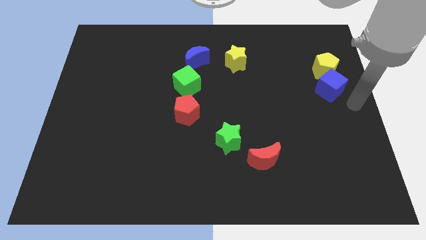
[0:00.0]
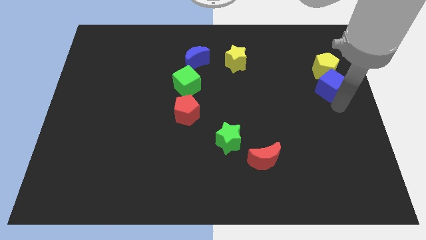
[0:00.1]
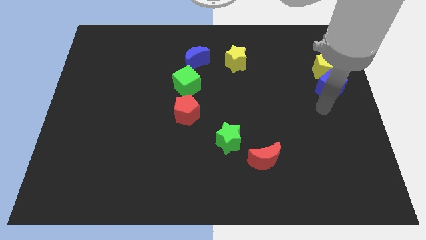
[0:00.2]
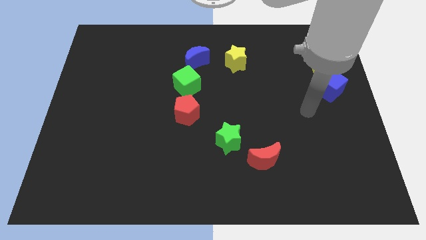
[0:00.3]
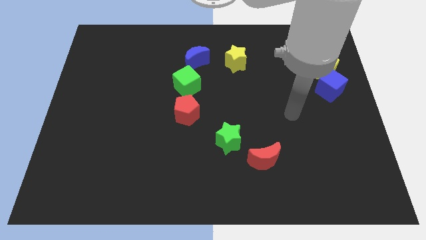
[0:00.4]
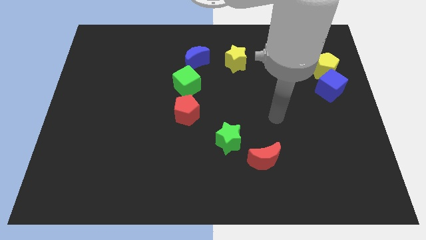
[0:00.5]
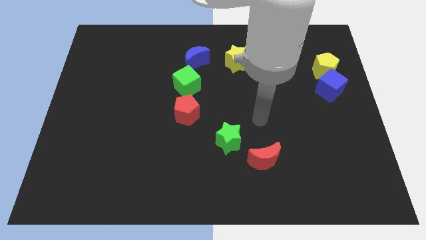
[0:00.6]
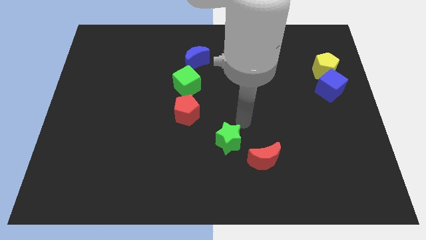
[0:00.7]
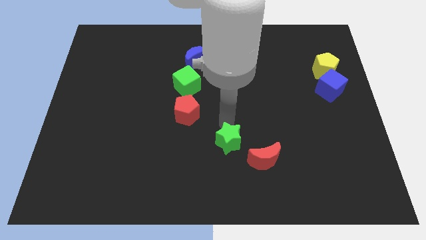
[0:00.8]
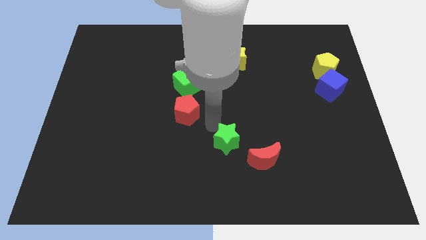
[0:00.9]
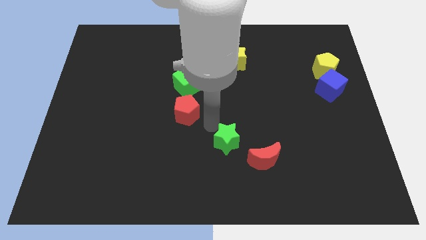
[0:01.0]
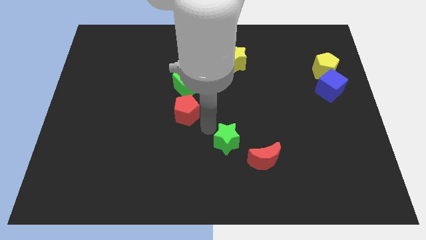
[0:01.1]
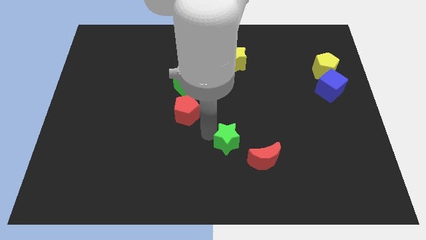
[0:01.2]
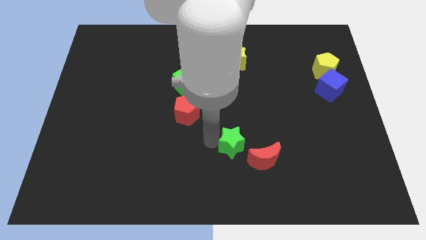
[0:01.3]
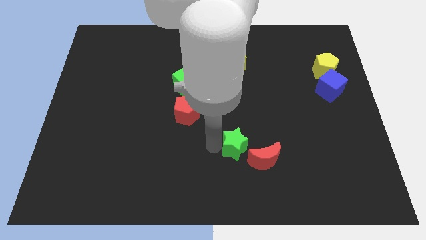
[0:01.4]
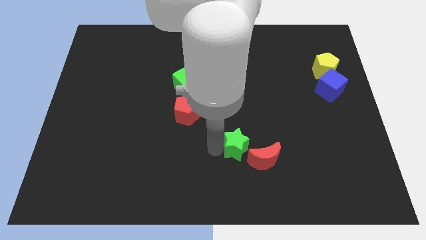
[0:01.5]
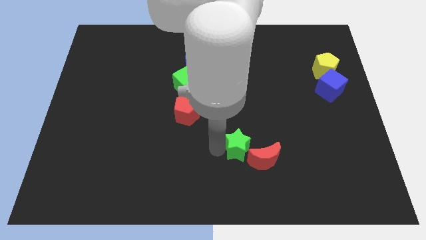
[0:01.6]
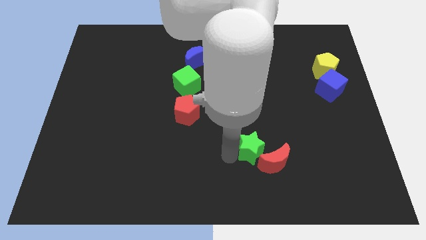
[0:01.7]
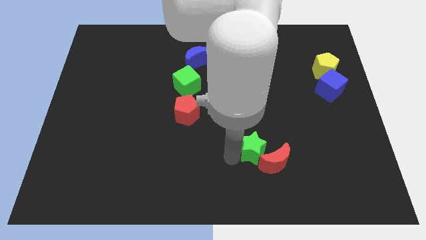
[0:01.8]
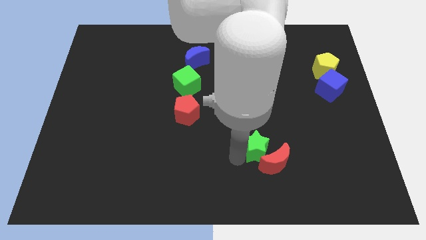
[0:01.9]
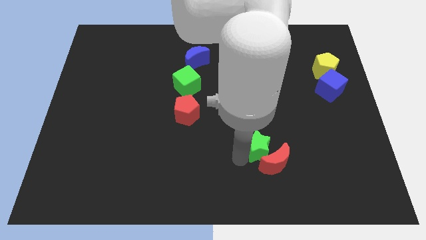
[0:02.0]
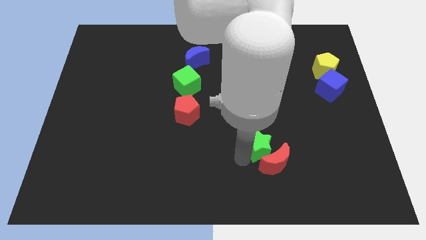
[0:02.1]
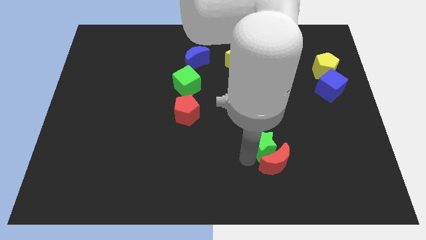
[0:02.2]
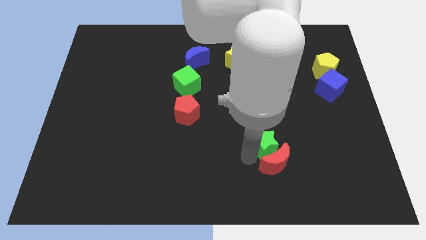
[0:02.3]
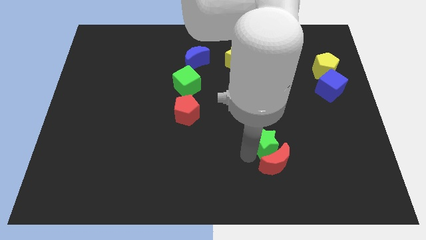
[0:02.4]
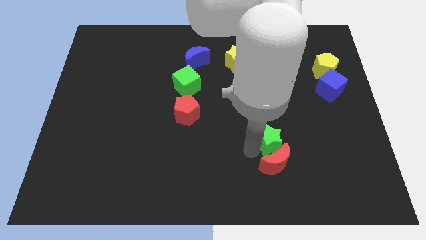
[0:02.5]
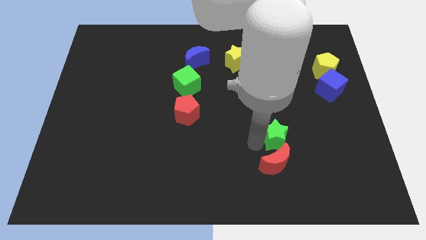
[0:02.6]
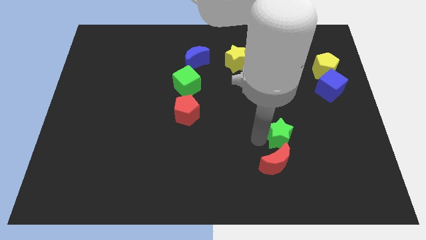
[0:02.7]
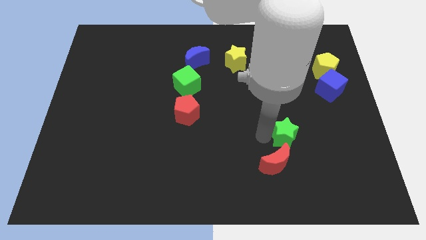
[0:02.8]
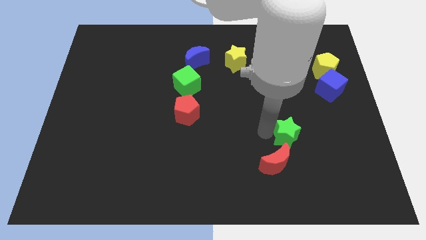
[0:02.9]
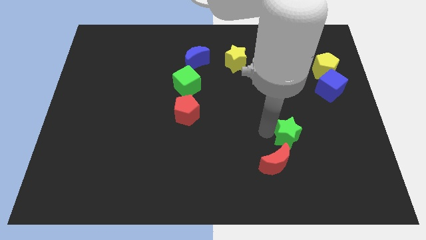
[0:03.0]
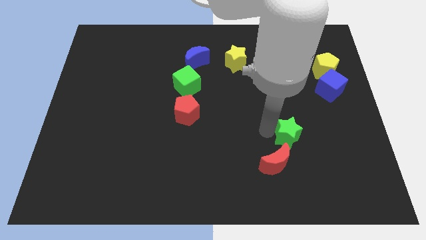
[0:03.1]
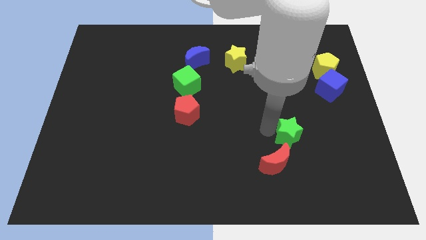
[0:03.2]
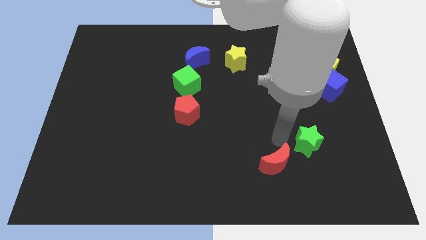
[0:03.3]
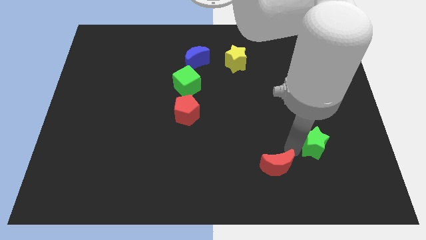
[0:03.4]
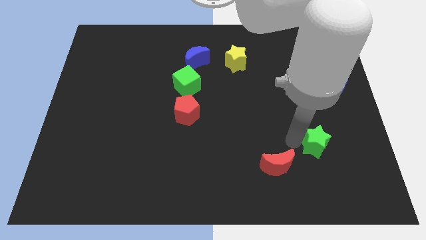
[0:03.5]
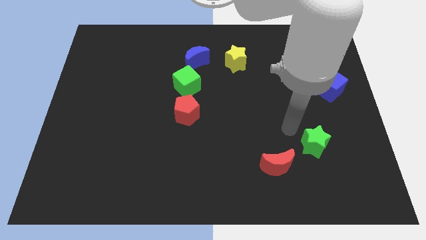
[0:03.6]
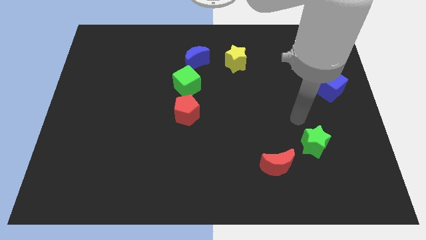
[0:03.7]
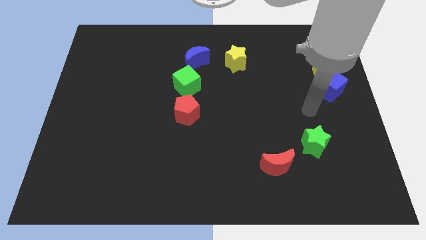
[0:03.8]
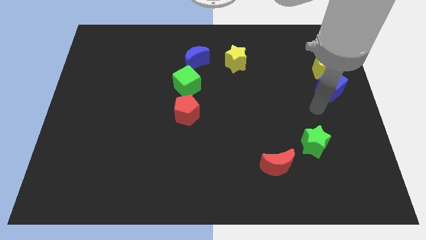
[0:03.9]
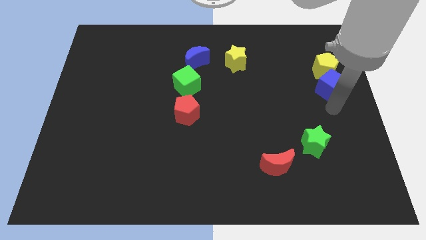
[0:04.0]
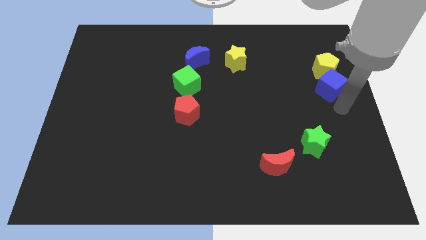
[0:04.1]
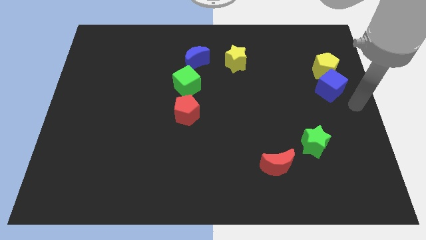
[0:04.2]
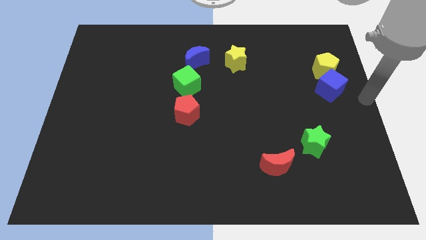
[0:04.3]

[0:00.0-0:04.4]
push the green star to the right of the red crescent

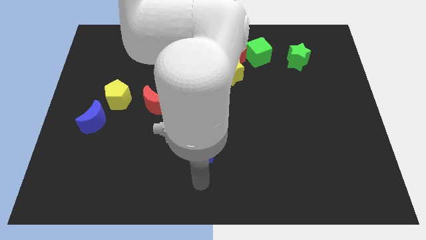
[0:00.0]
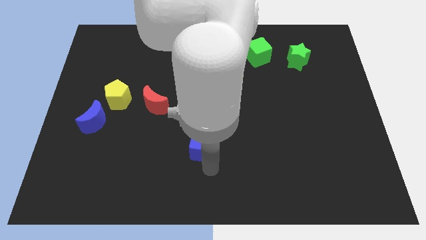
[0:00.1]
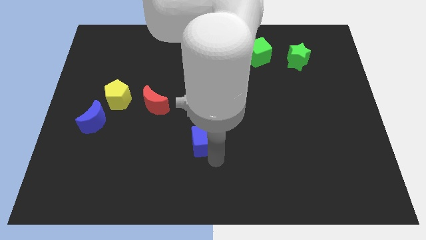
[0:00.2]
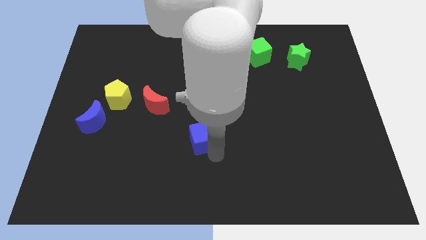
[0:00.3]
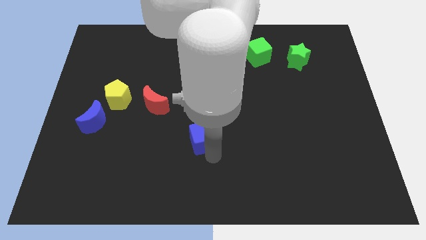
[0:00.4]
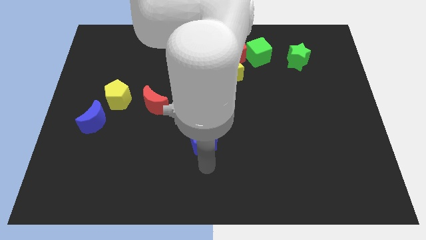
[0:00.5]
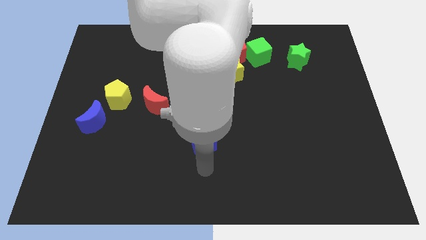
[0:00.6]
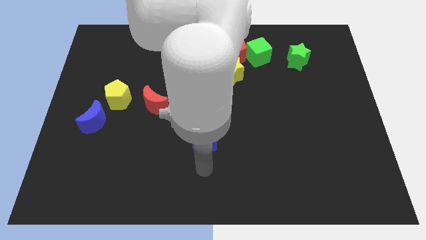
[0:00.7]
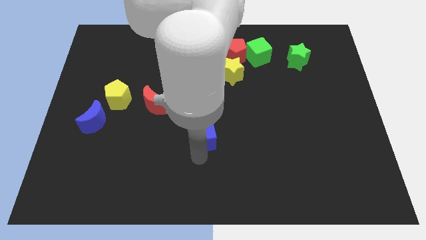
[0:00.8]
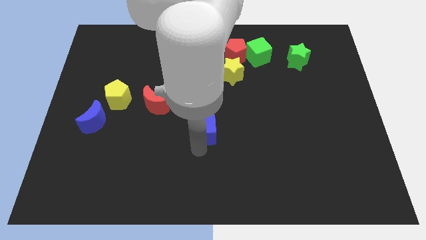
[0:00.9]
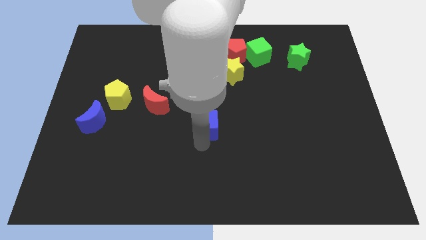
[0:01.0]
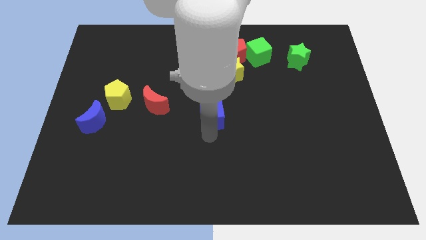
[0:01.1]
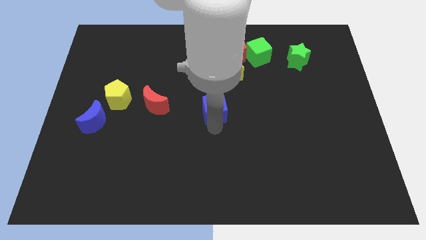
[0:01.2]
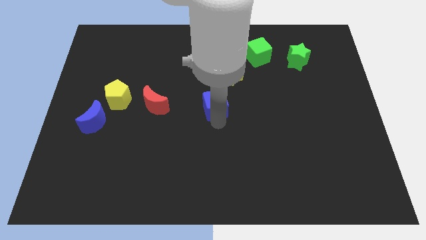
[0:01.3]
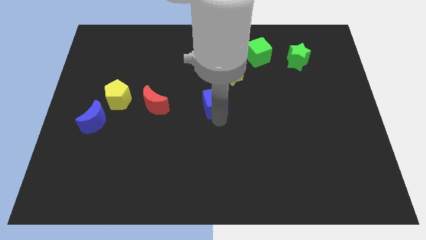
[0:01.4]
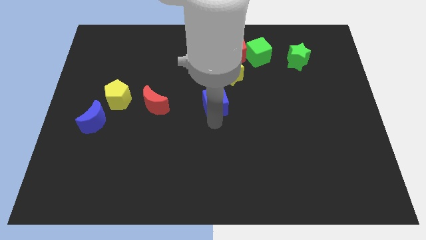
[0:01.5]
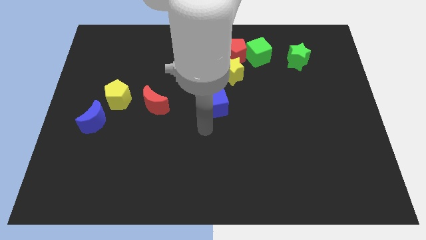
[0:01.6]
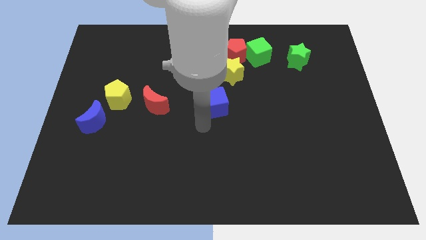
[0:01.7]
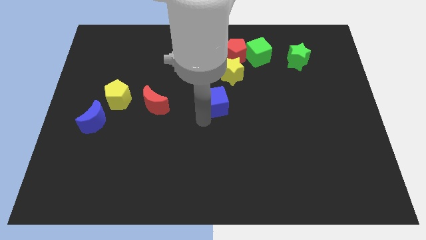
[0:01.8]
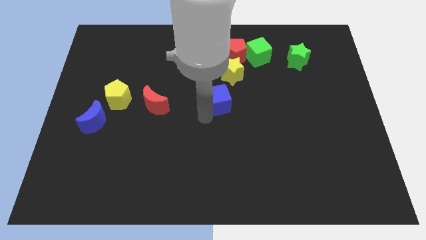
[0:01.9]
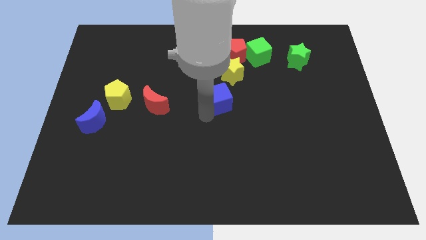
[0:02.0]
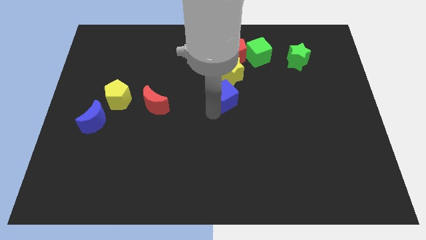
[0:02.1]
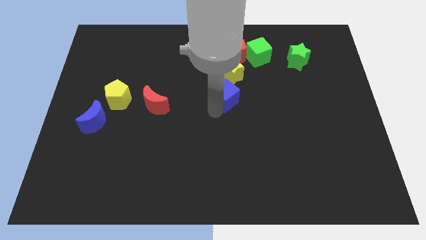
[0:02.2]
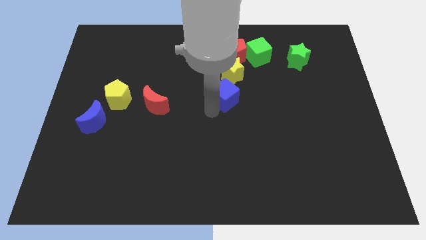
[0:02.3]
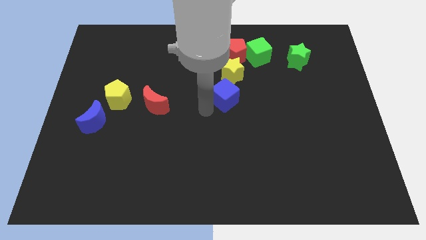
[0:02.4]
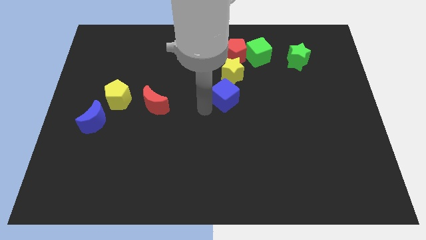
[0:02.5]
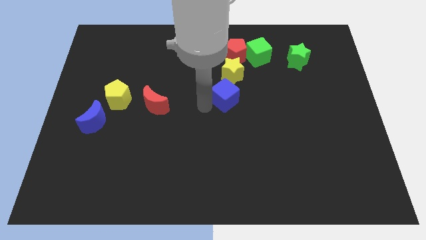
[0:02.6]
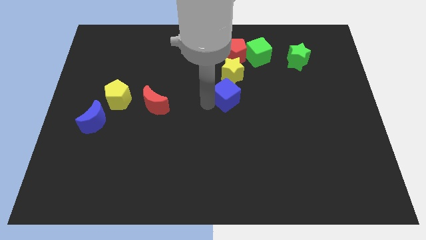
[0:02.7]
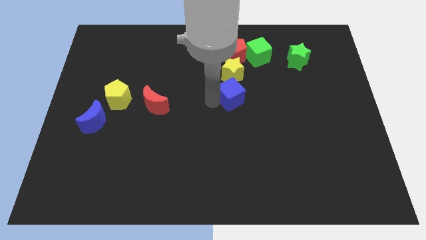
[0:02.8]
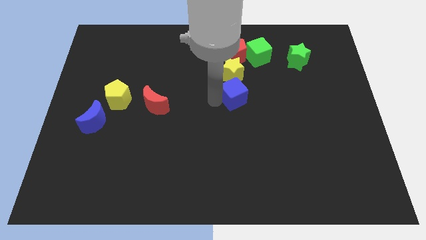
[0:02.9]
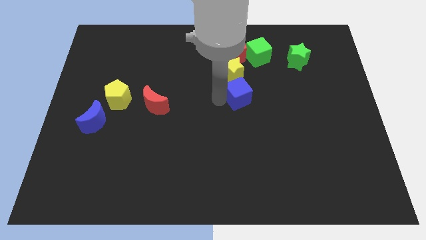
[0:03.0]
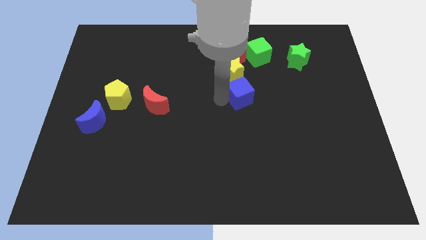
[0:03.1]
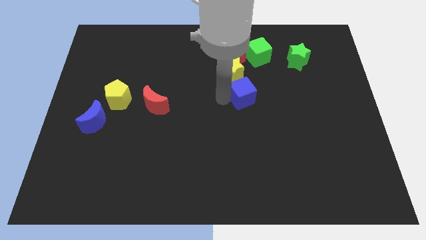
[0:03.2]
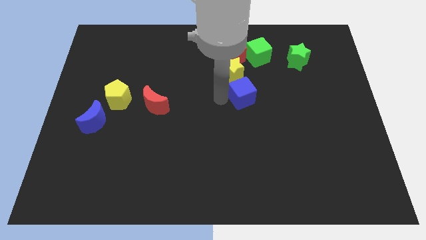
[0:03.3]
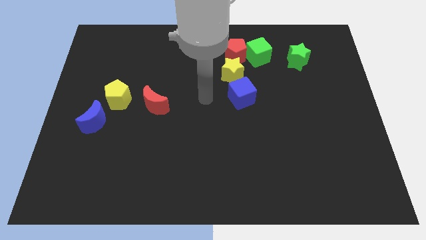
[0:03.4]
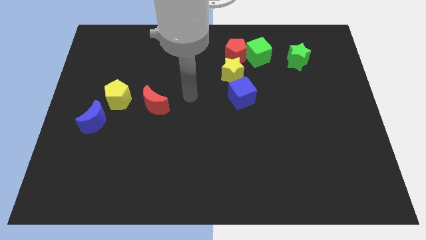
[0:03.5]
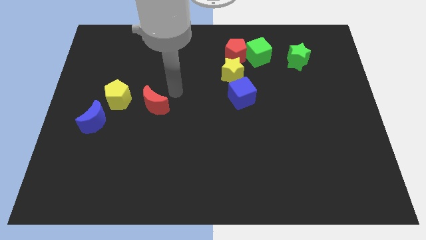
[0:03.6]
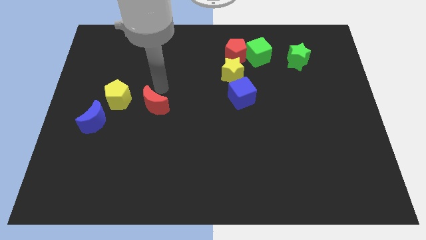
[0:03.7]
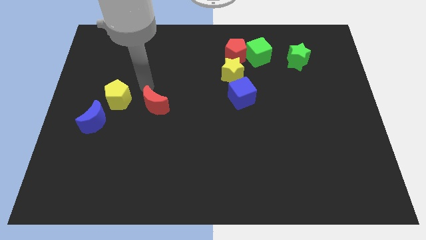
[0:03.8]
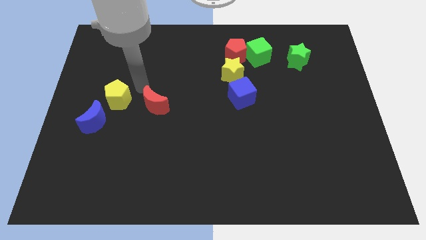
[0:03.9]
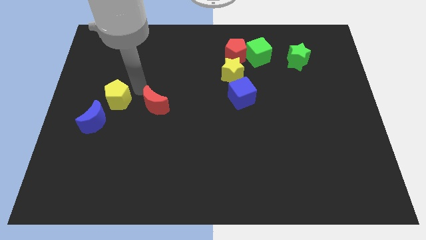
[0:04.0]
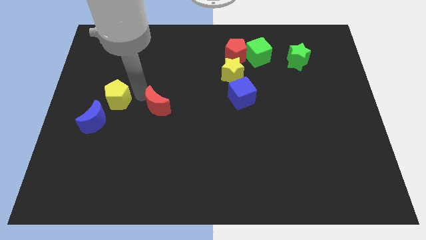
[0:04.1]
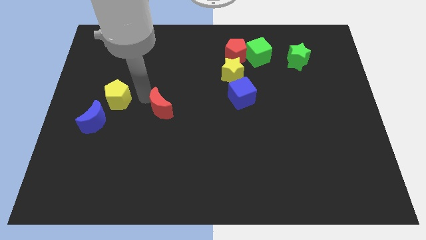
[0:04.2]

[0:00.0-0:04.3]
place the blue cube below the yellow star

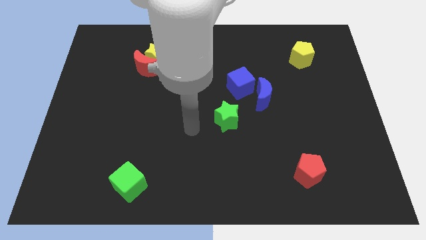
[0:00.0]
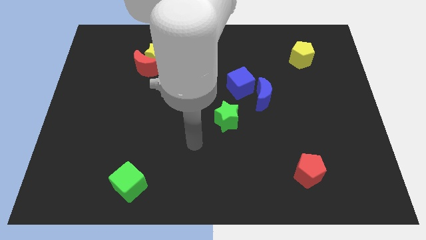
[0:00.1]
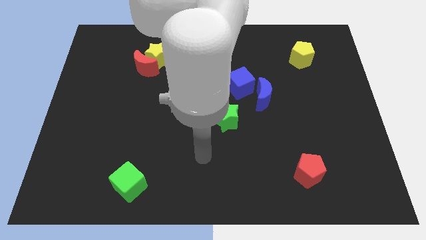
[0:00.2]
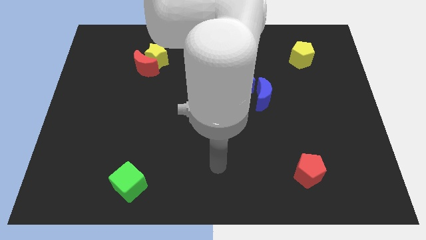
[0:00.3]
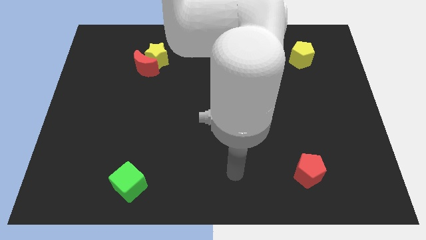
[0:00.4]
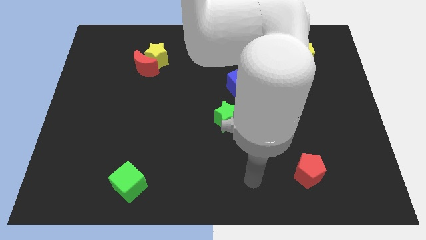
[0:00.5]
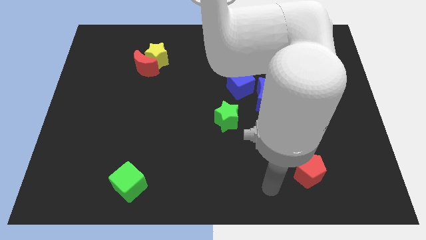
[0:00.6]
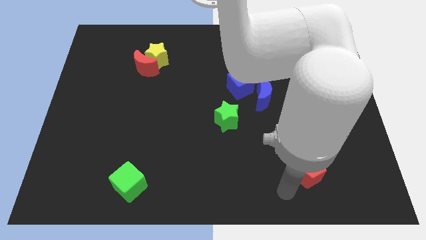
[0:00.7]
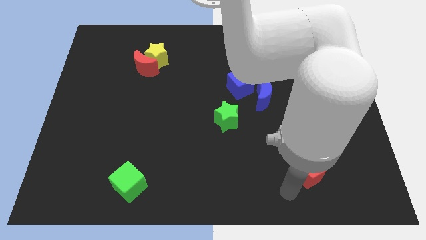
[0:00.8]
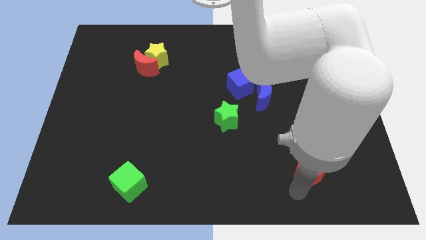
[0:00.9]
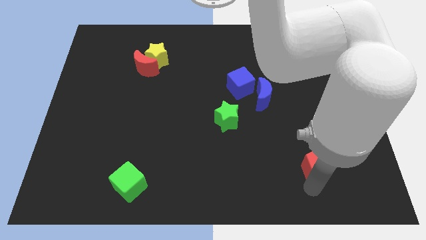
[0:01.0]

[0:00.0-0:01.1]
place arm below red pentagon
